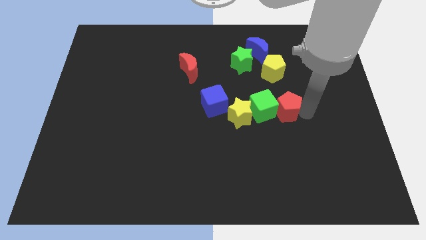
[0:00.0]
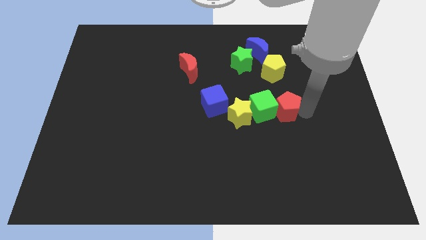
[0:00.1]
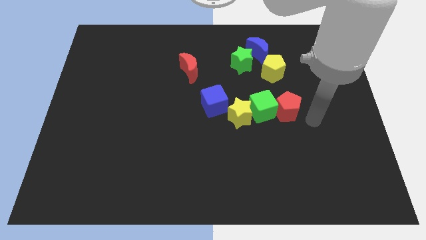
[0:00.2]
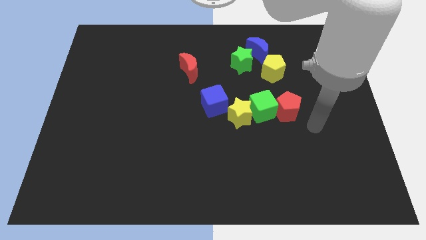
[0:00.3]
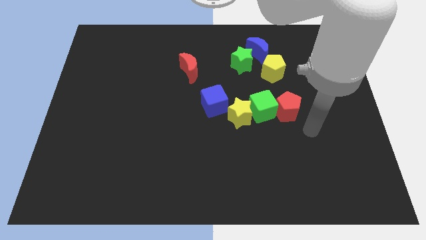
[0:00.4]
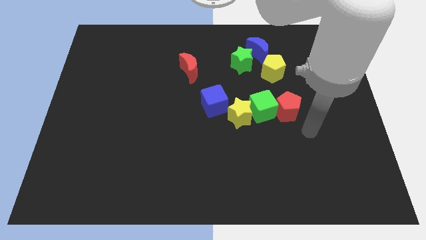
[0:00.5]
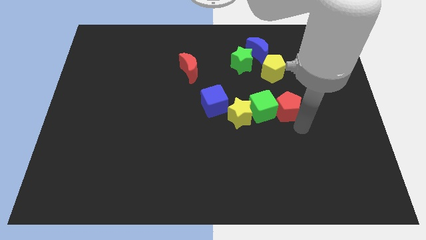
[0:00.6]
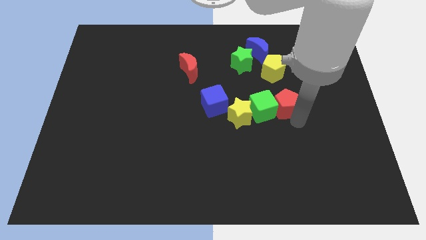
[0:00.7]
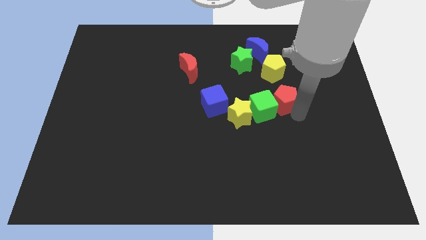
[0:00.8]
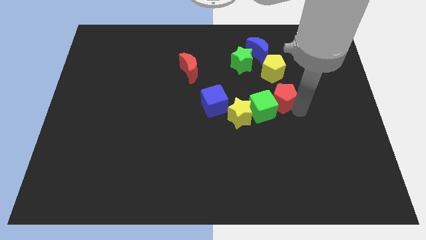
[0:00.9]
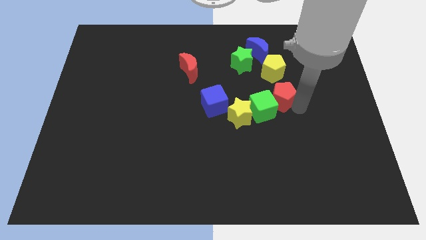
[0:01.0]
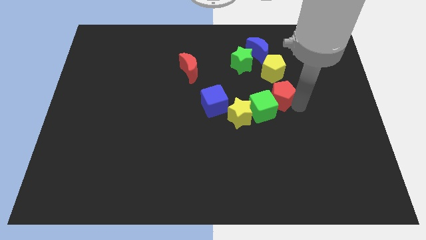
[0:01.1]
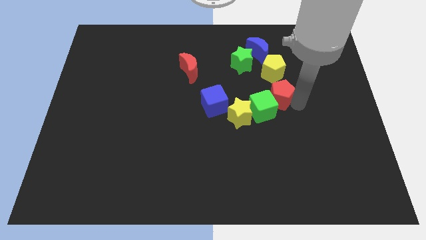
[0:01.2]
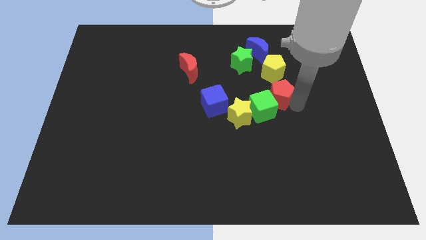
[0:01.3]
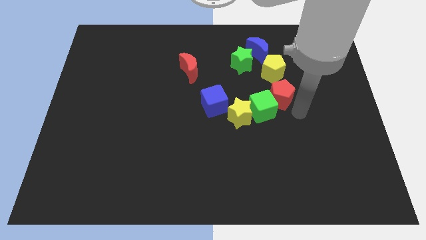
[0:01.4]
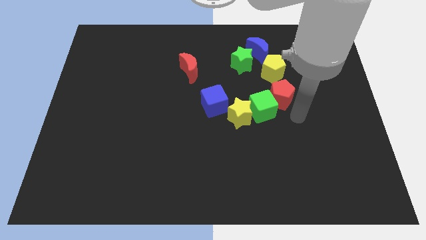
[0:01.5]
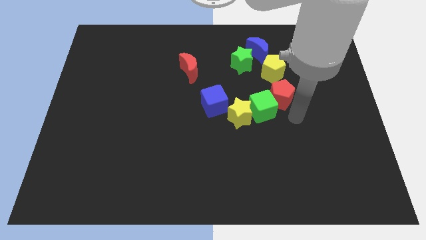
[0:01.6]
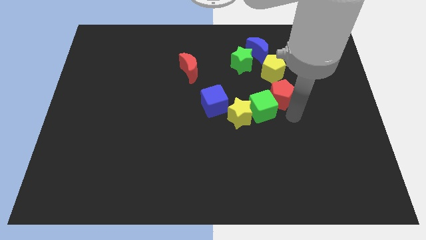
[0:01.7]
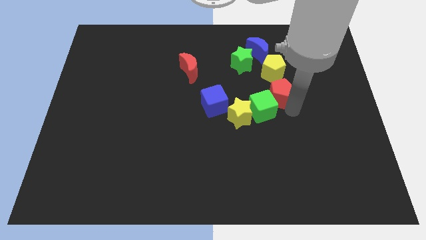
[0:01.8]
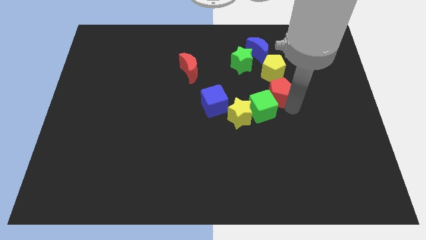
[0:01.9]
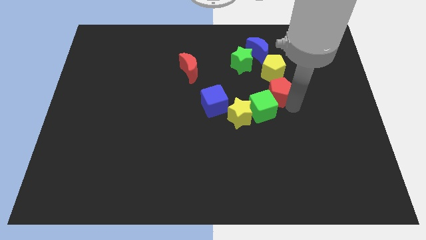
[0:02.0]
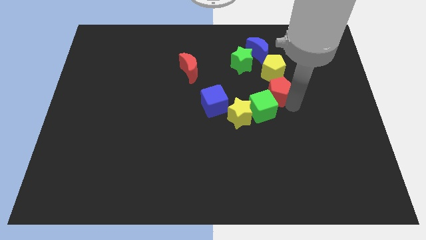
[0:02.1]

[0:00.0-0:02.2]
move the red pentagon to the bottom of the yellow pentagon

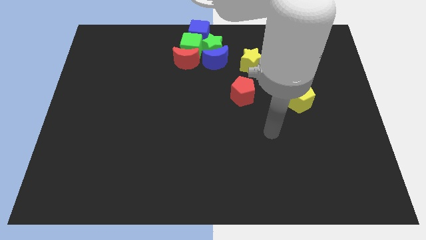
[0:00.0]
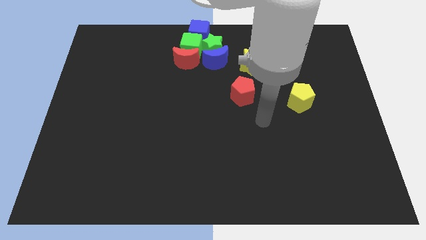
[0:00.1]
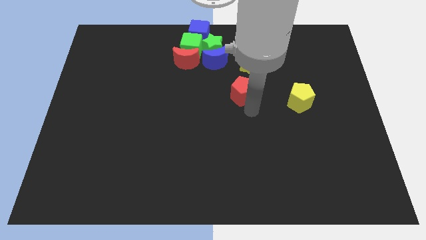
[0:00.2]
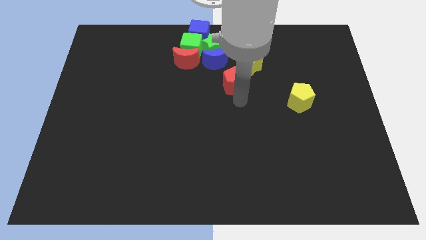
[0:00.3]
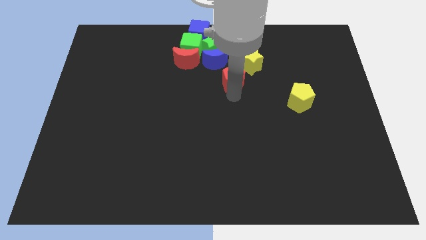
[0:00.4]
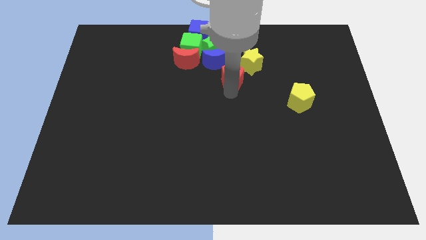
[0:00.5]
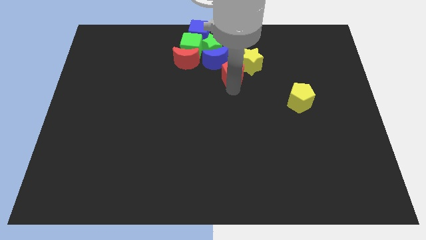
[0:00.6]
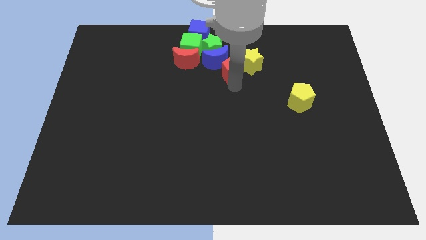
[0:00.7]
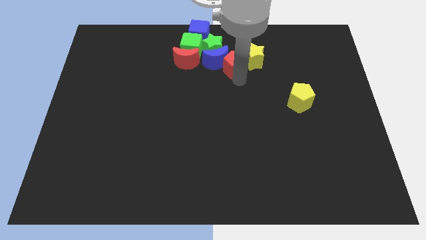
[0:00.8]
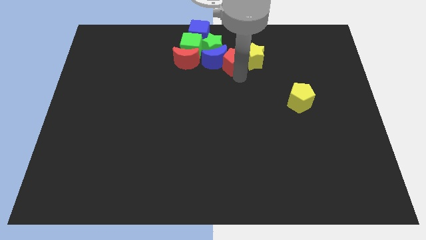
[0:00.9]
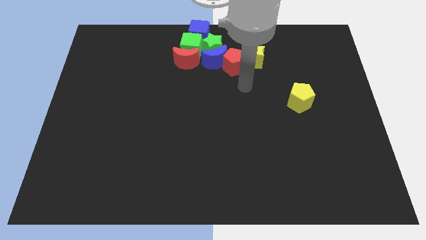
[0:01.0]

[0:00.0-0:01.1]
push the red pentagon to the right of the blue crescent

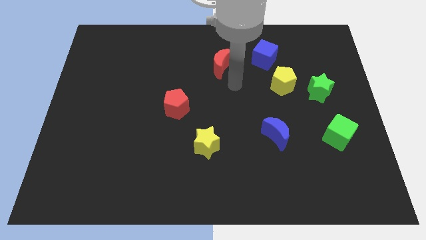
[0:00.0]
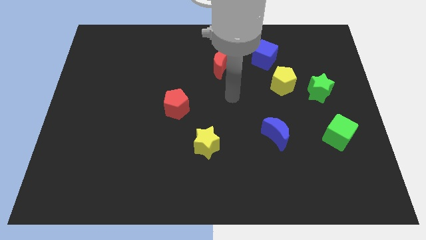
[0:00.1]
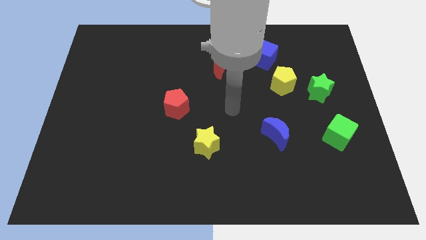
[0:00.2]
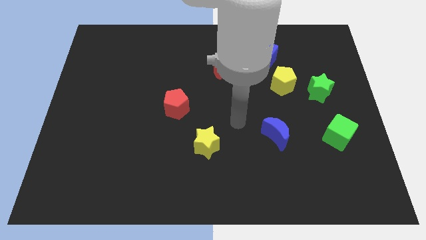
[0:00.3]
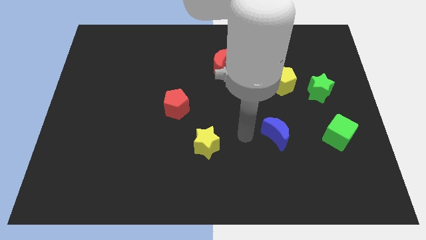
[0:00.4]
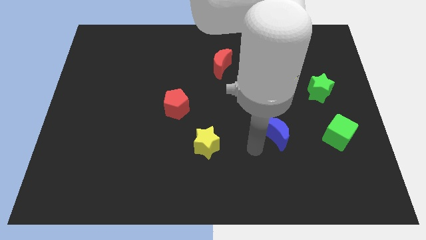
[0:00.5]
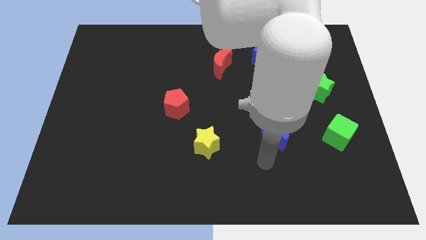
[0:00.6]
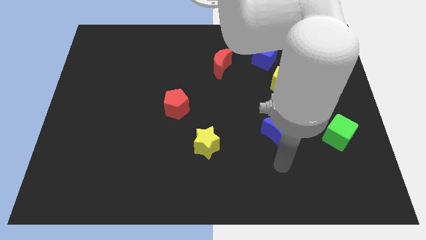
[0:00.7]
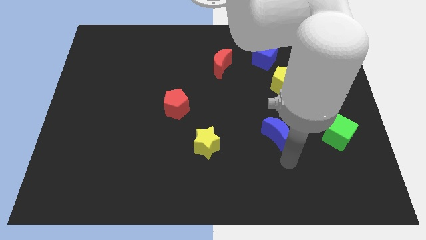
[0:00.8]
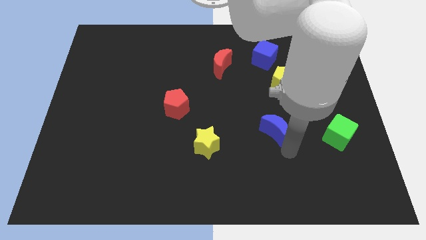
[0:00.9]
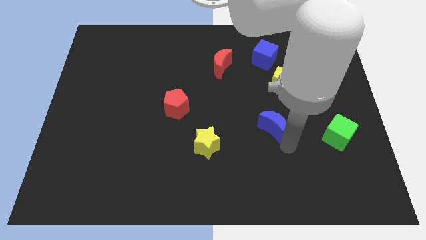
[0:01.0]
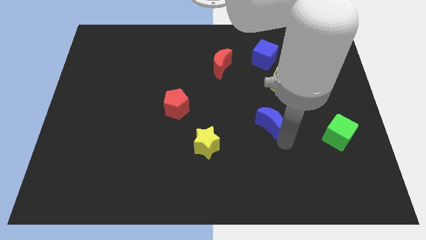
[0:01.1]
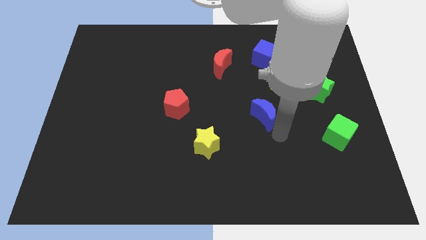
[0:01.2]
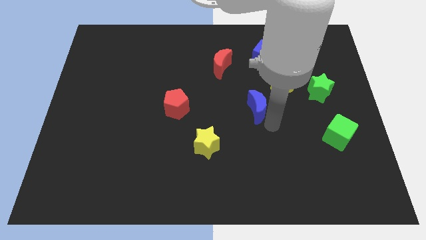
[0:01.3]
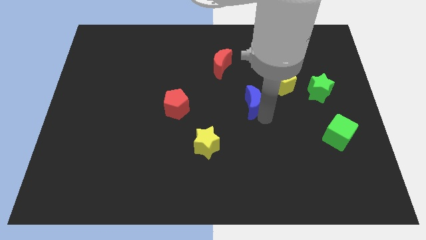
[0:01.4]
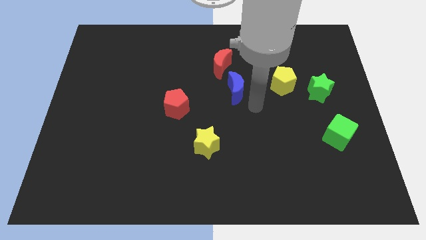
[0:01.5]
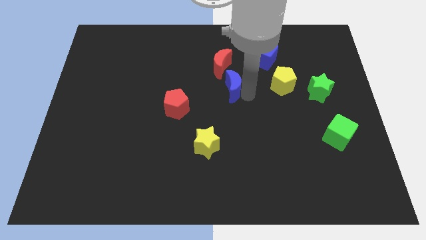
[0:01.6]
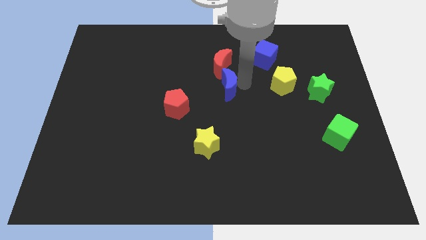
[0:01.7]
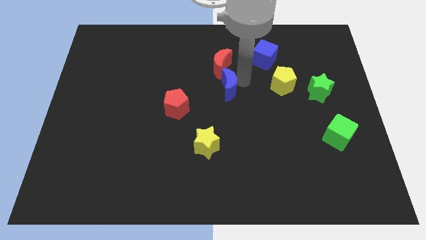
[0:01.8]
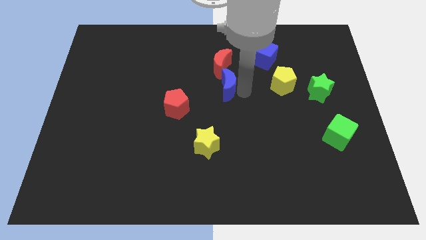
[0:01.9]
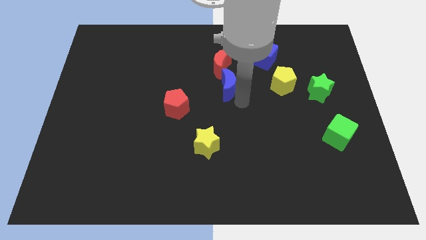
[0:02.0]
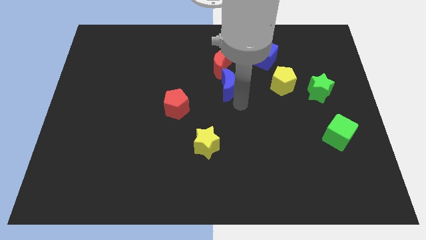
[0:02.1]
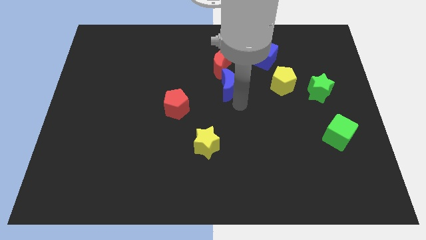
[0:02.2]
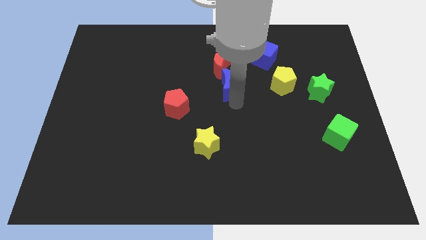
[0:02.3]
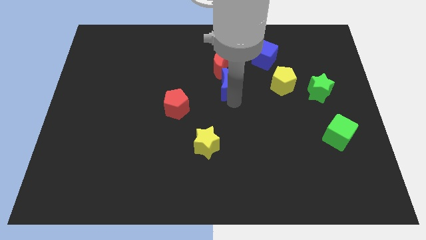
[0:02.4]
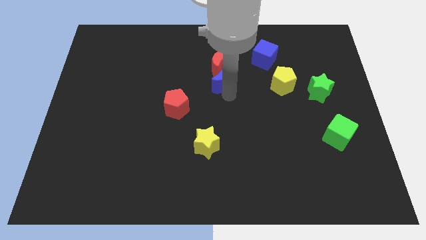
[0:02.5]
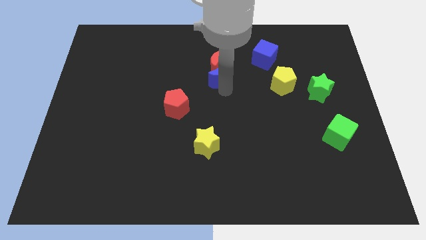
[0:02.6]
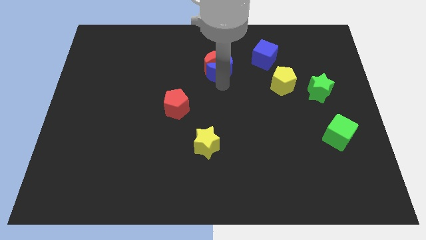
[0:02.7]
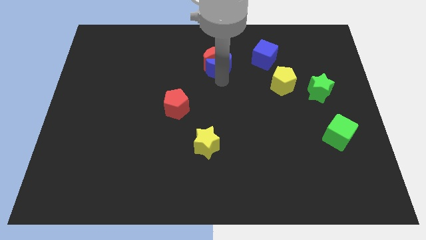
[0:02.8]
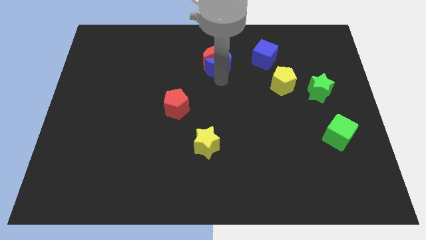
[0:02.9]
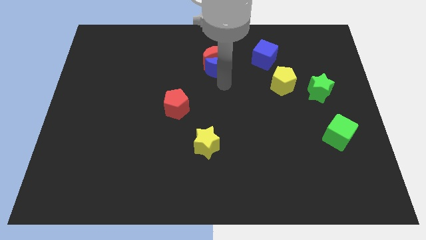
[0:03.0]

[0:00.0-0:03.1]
slide the blue crescent into the bottom side of the red moon

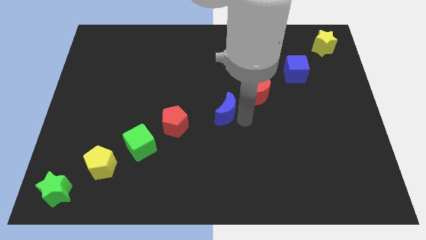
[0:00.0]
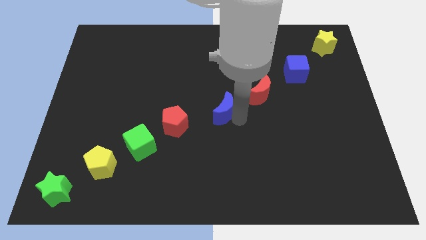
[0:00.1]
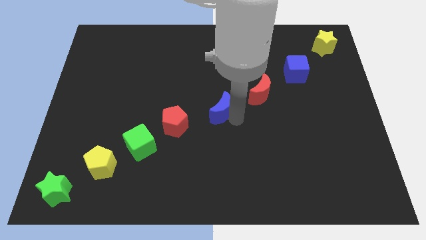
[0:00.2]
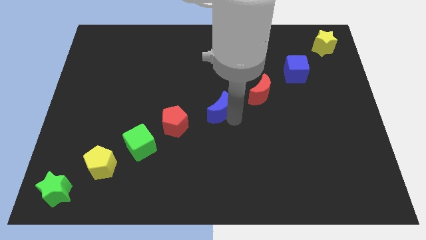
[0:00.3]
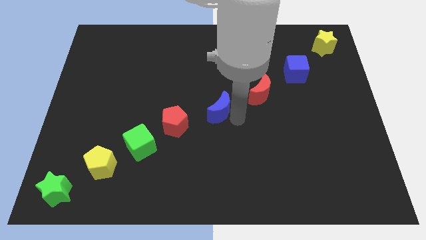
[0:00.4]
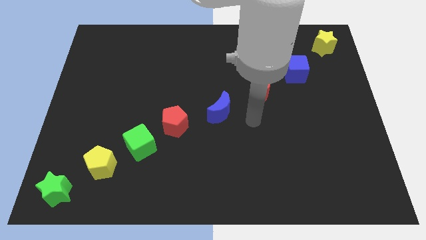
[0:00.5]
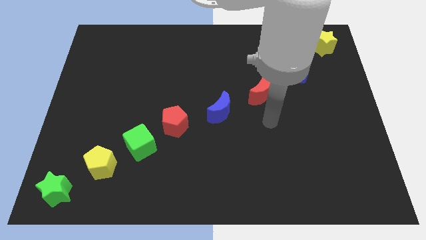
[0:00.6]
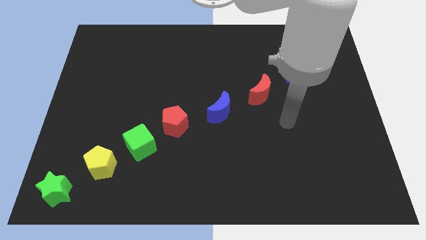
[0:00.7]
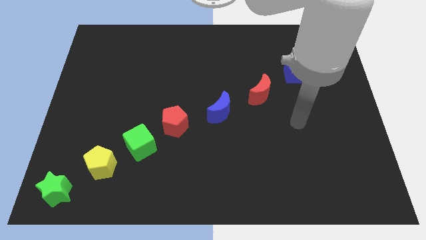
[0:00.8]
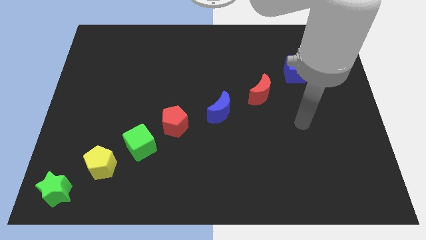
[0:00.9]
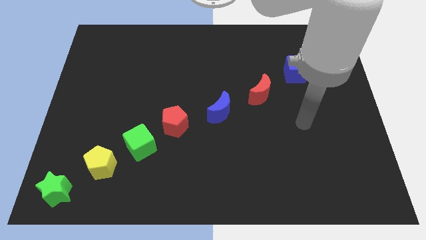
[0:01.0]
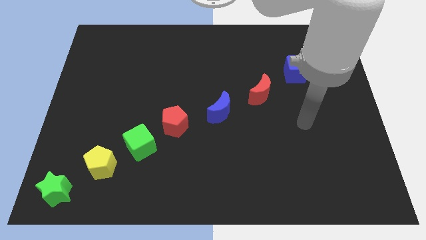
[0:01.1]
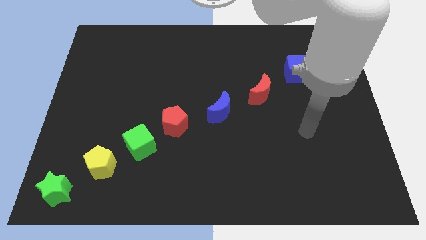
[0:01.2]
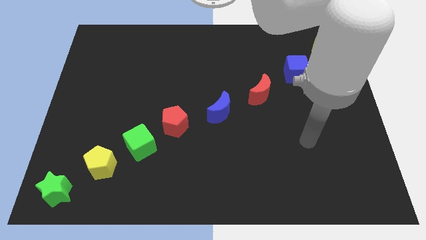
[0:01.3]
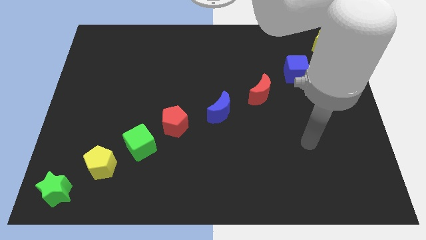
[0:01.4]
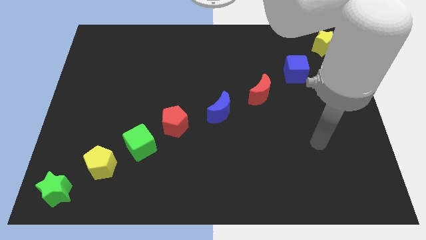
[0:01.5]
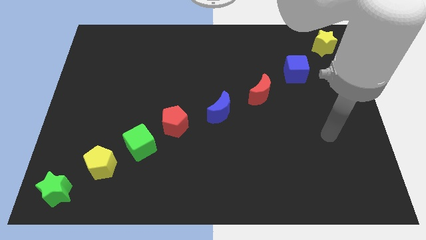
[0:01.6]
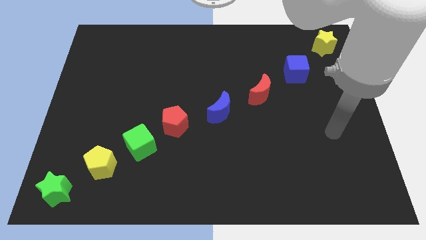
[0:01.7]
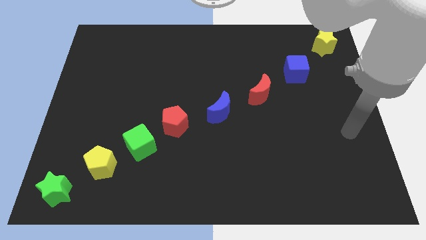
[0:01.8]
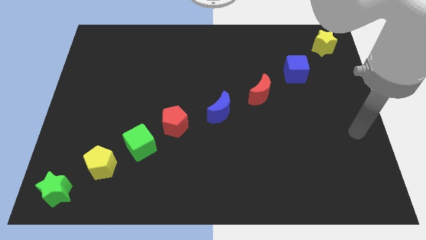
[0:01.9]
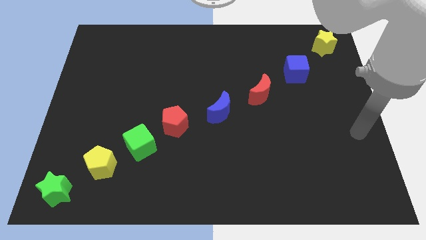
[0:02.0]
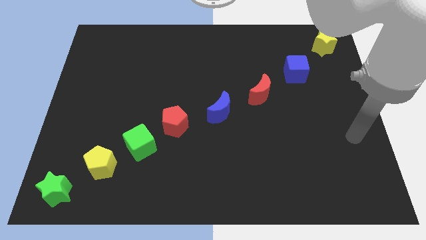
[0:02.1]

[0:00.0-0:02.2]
move the blue moon in between the red moon and red pentagon

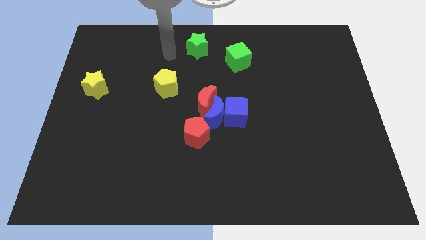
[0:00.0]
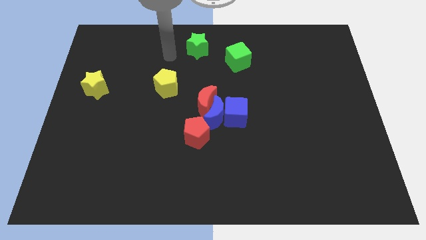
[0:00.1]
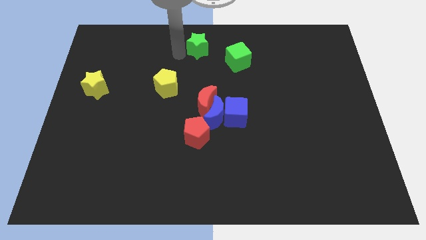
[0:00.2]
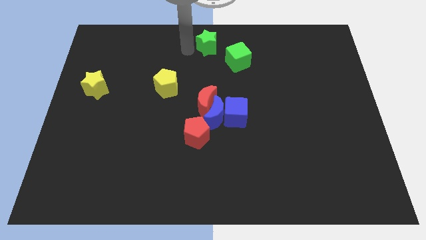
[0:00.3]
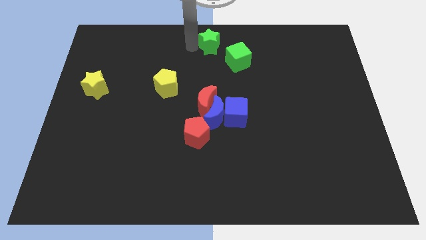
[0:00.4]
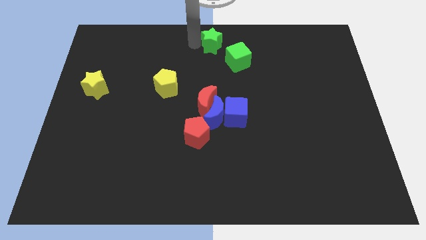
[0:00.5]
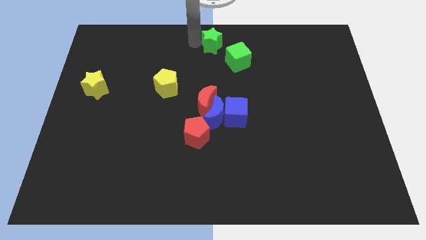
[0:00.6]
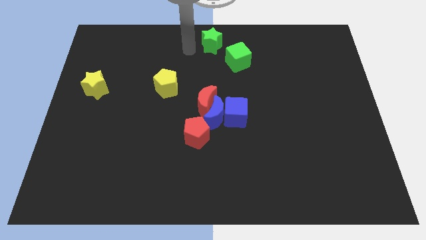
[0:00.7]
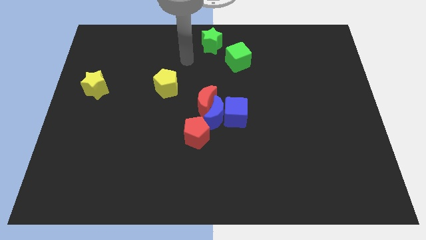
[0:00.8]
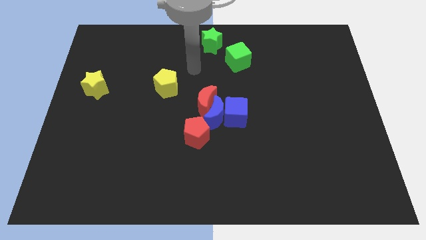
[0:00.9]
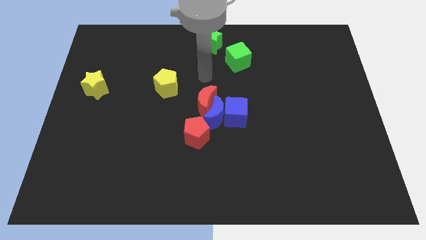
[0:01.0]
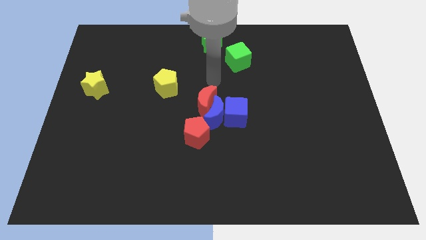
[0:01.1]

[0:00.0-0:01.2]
push the green star to the center top
